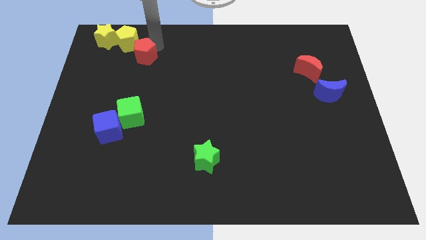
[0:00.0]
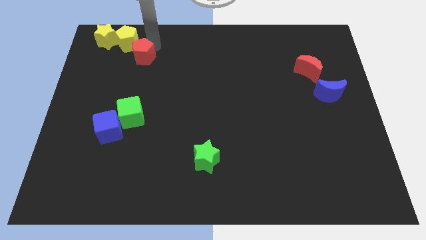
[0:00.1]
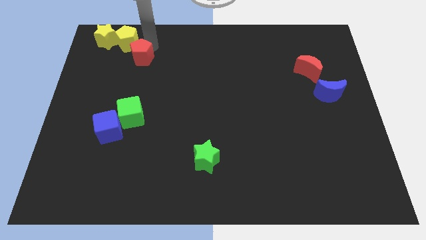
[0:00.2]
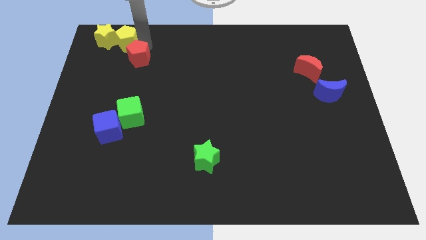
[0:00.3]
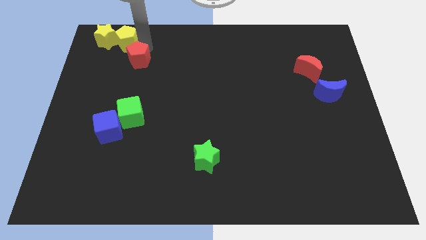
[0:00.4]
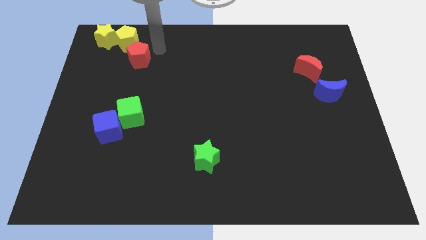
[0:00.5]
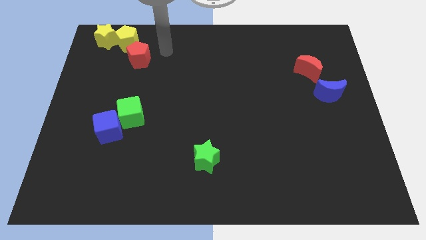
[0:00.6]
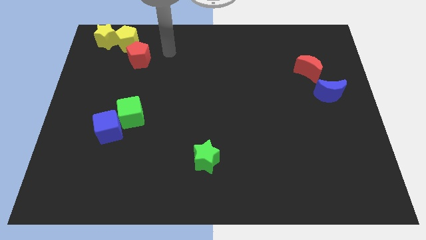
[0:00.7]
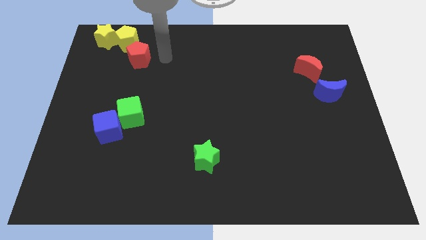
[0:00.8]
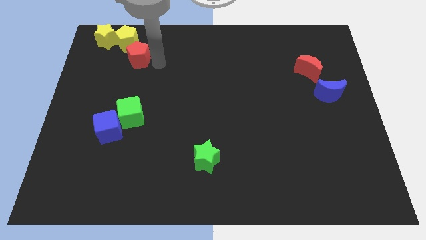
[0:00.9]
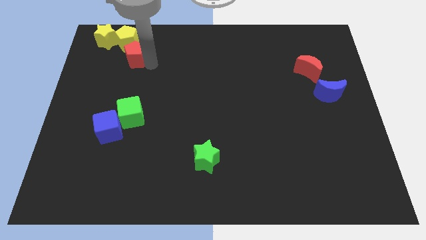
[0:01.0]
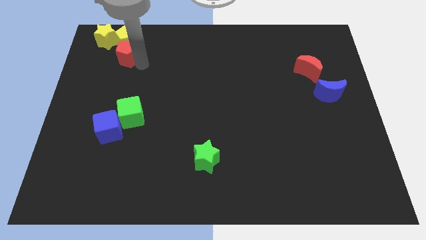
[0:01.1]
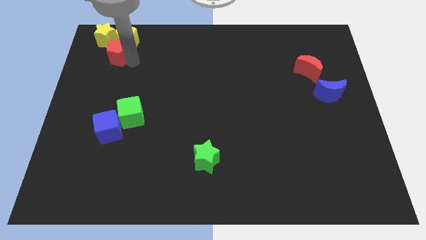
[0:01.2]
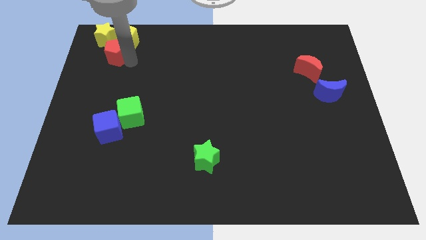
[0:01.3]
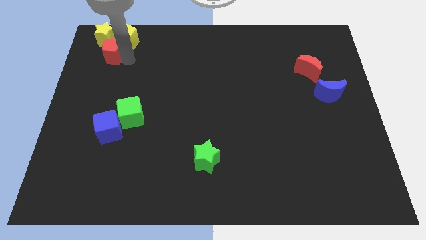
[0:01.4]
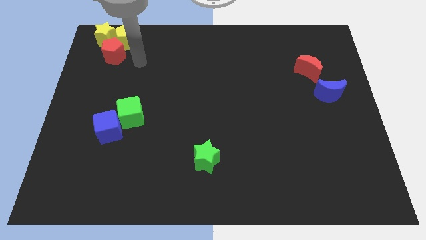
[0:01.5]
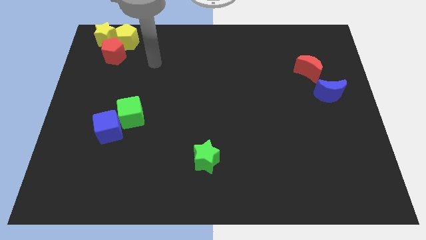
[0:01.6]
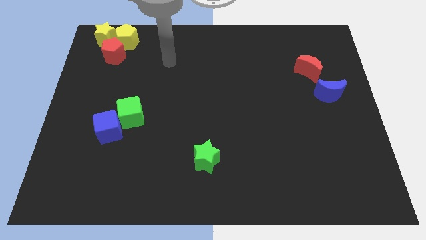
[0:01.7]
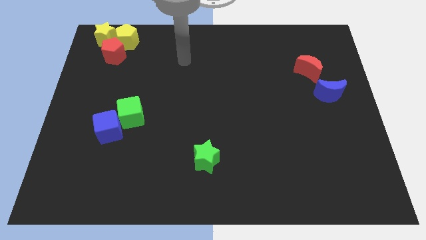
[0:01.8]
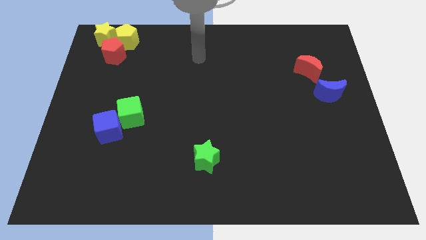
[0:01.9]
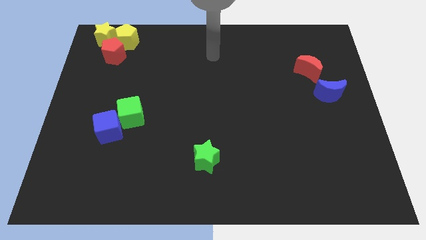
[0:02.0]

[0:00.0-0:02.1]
place the red pentagon to the bottom of the yellow pentagon

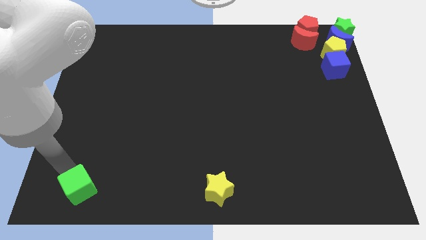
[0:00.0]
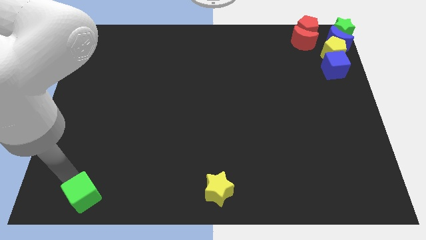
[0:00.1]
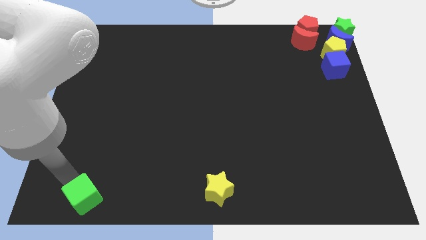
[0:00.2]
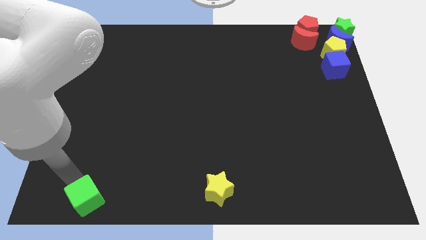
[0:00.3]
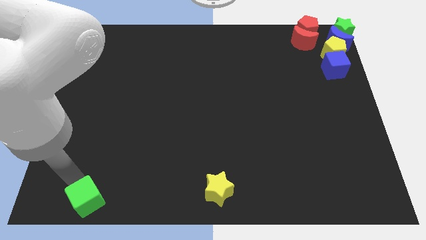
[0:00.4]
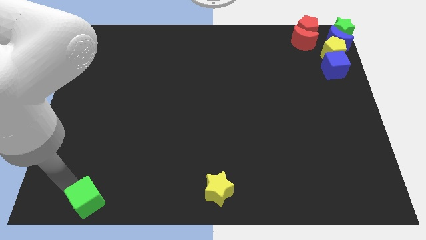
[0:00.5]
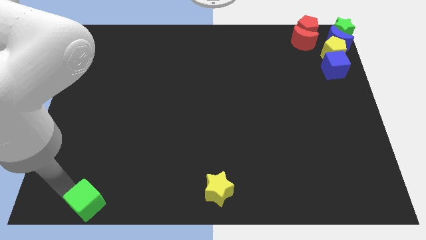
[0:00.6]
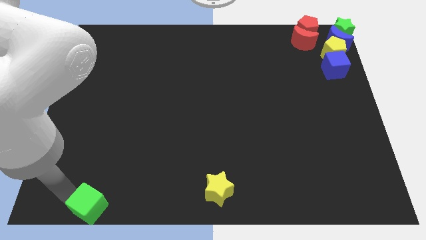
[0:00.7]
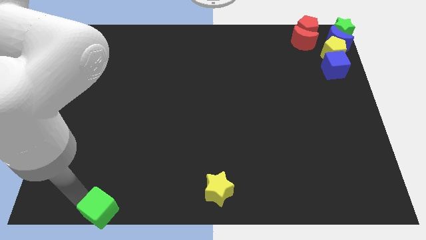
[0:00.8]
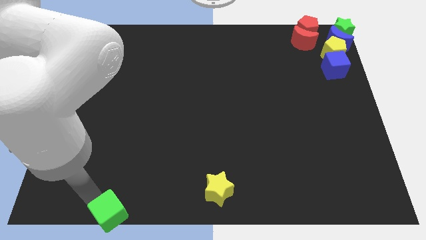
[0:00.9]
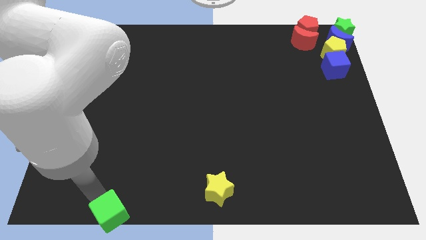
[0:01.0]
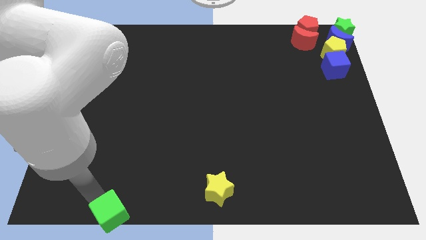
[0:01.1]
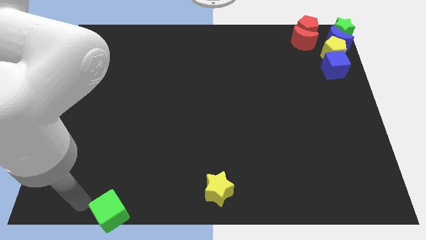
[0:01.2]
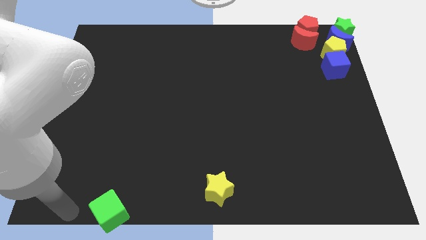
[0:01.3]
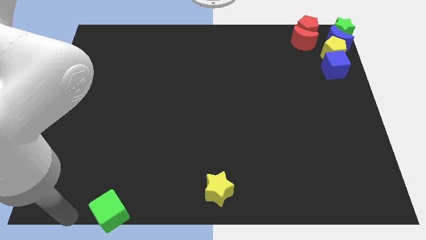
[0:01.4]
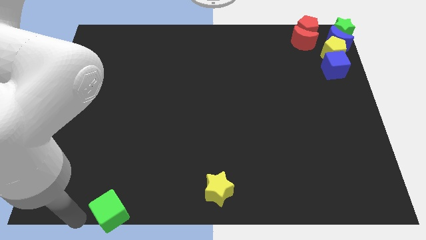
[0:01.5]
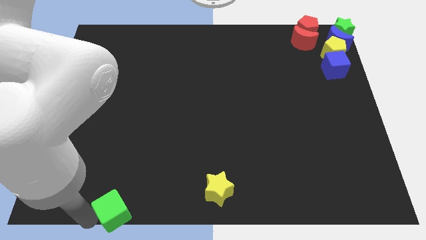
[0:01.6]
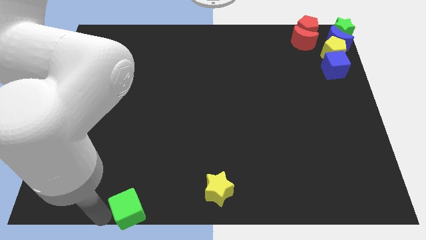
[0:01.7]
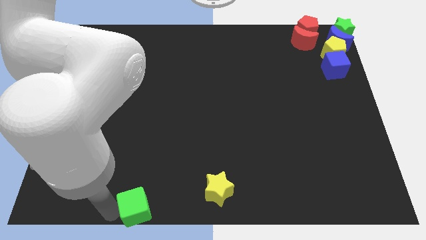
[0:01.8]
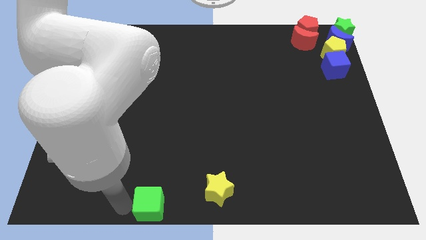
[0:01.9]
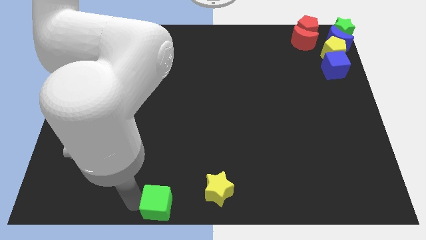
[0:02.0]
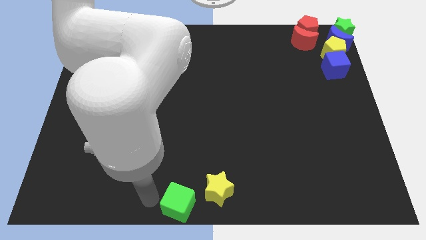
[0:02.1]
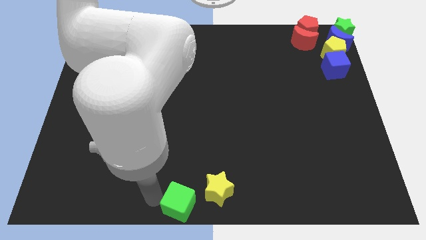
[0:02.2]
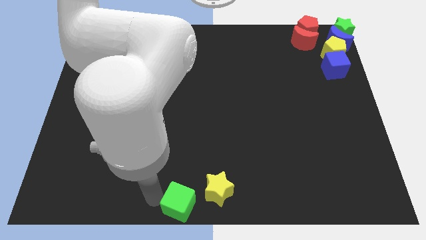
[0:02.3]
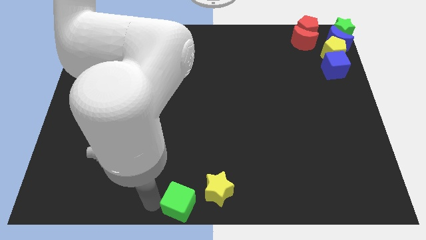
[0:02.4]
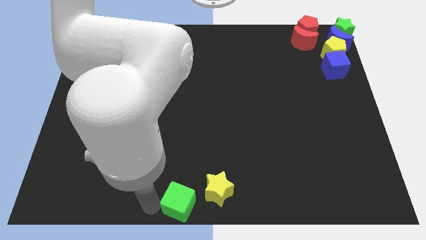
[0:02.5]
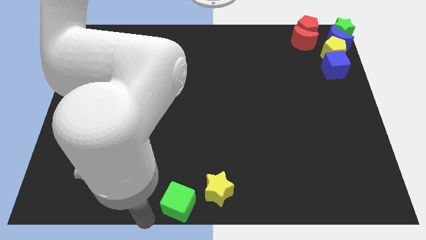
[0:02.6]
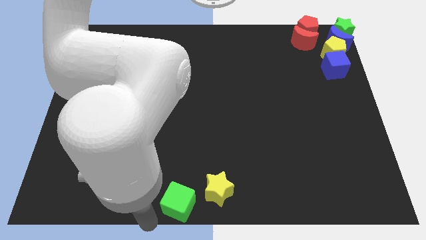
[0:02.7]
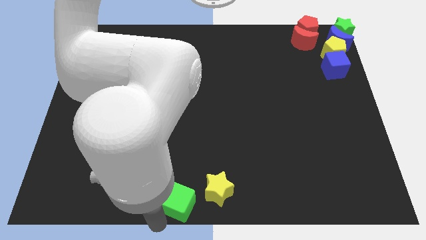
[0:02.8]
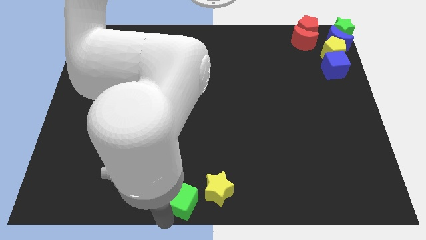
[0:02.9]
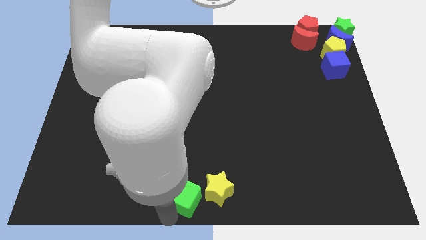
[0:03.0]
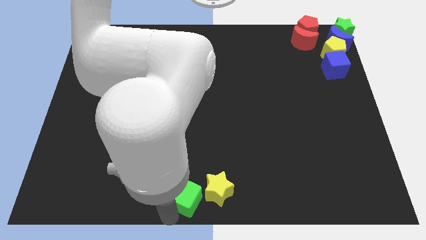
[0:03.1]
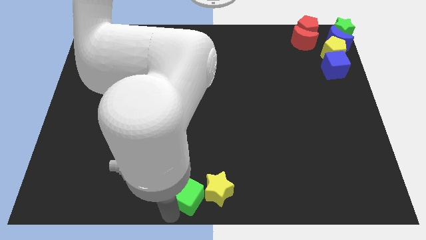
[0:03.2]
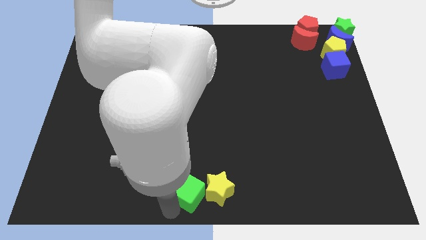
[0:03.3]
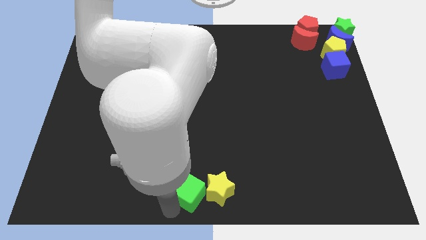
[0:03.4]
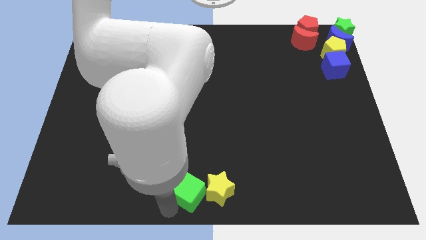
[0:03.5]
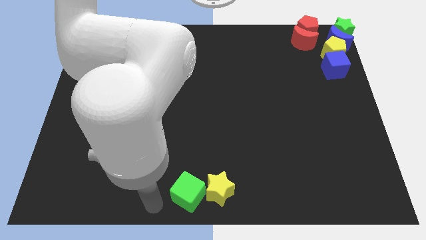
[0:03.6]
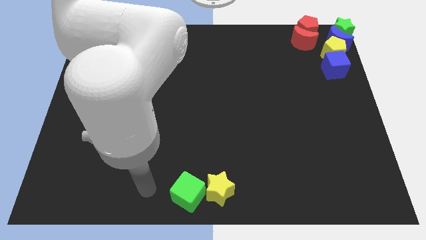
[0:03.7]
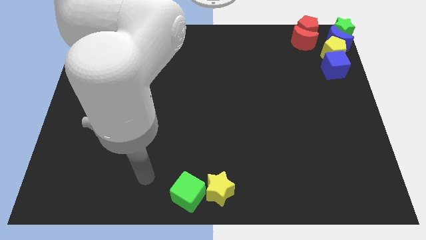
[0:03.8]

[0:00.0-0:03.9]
move green cube close to the yellow star

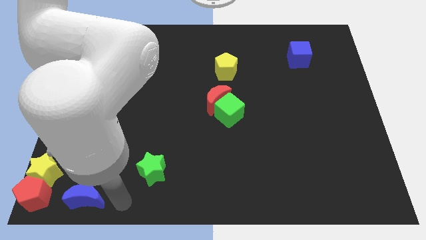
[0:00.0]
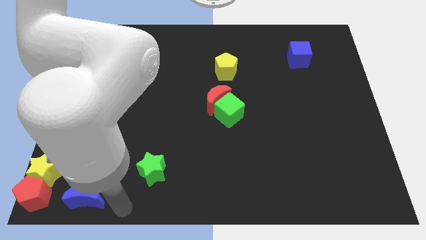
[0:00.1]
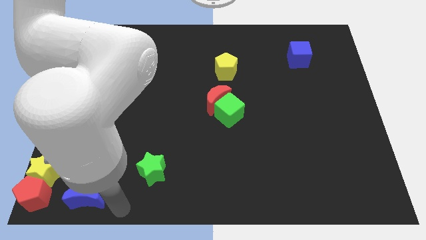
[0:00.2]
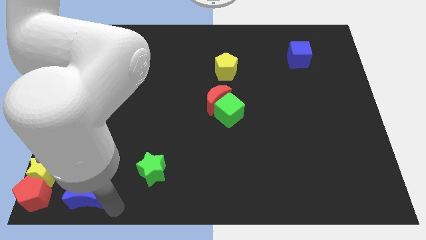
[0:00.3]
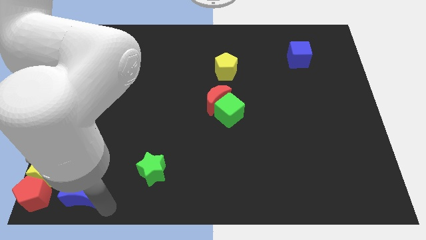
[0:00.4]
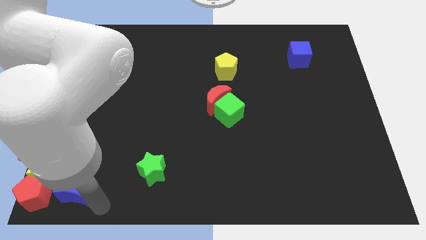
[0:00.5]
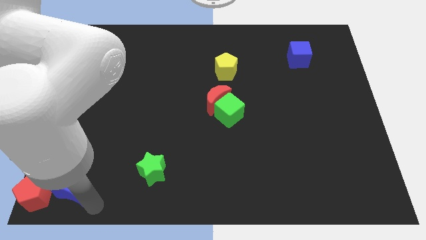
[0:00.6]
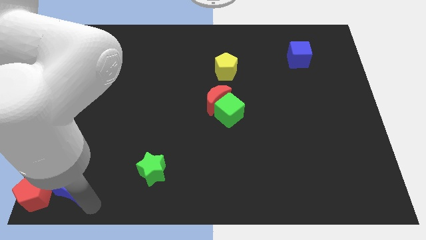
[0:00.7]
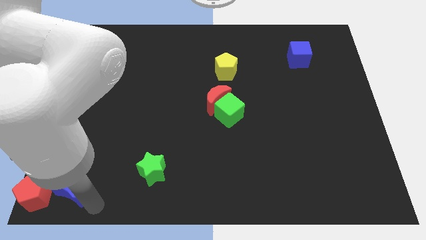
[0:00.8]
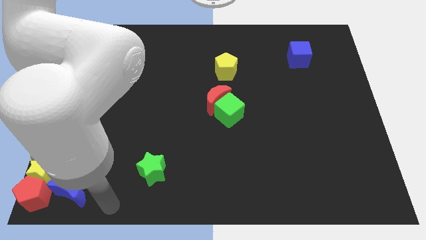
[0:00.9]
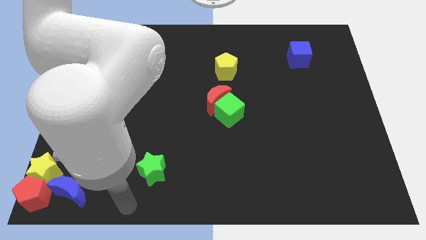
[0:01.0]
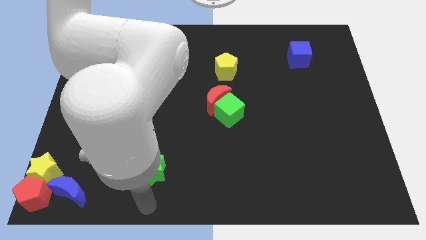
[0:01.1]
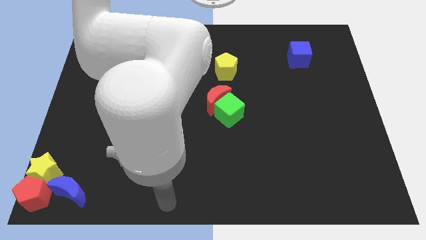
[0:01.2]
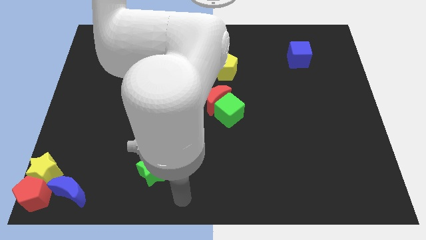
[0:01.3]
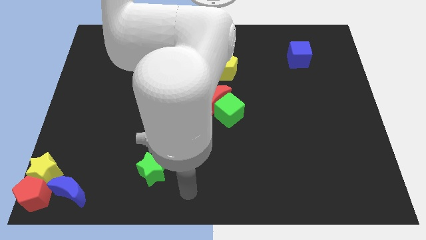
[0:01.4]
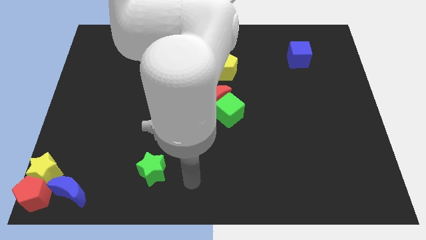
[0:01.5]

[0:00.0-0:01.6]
push blue crescent into red pentagon

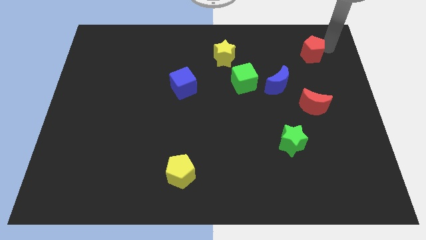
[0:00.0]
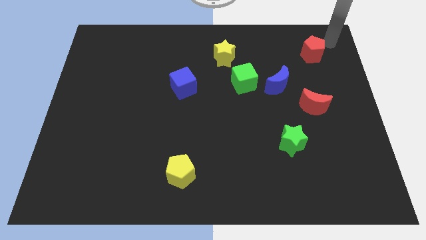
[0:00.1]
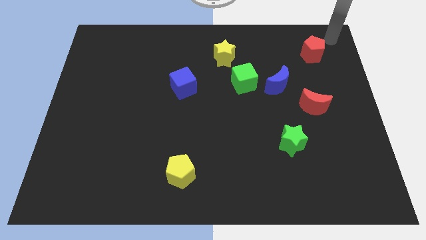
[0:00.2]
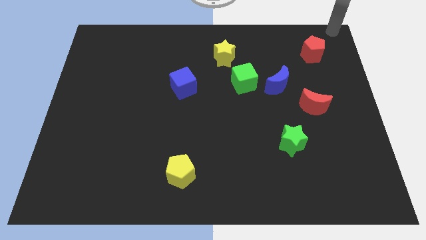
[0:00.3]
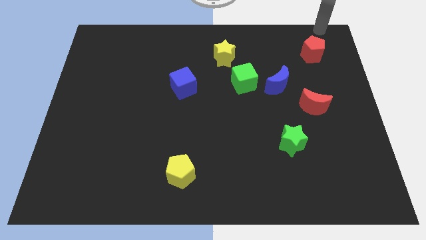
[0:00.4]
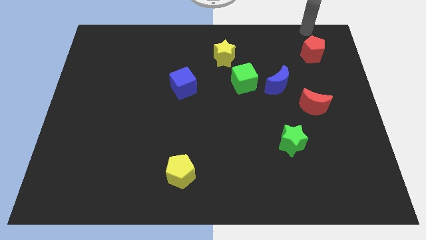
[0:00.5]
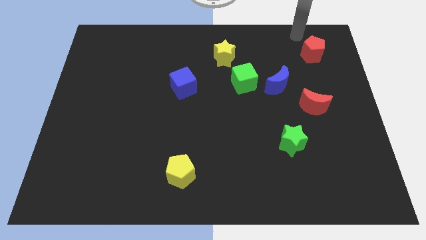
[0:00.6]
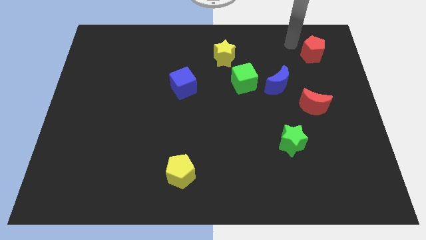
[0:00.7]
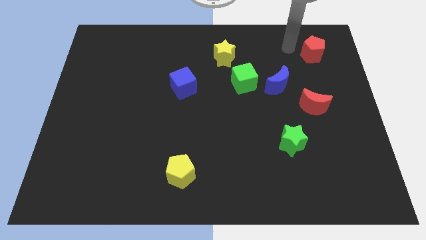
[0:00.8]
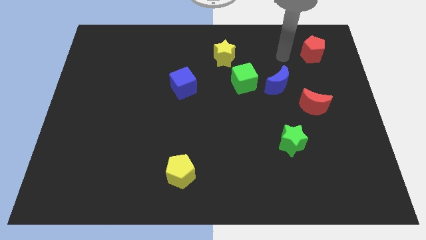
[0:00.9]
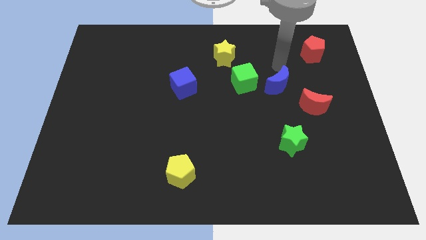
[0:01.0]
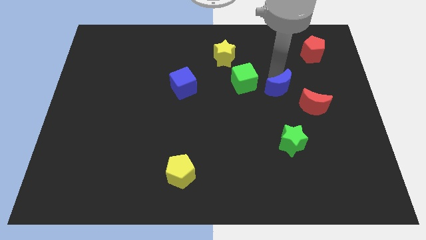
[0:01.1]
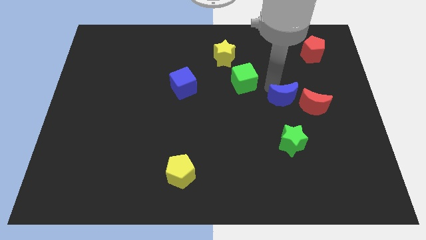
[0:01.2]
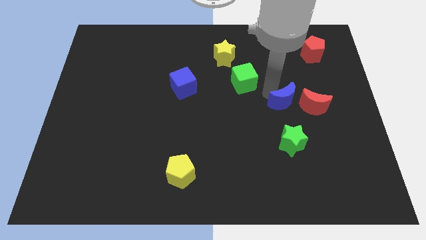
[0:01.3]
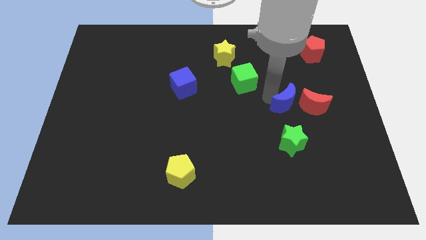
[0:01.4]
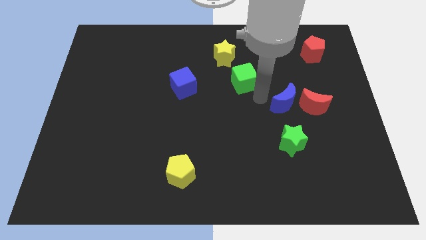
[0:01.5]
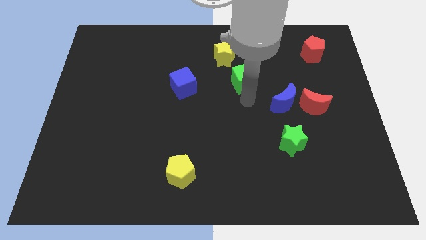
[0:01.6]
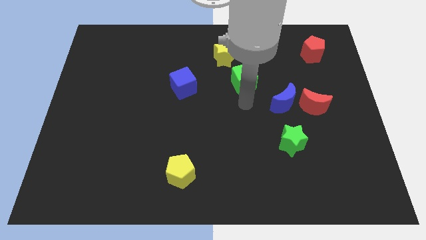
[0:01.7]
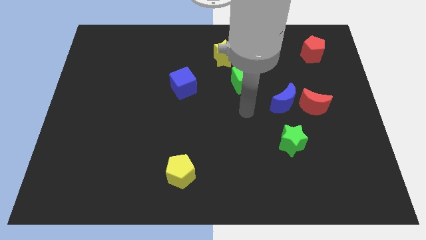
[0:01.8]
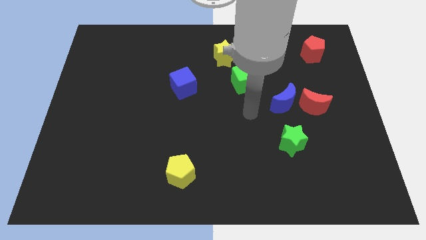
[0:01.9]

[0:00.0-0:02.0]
push the blue moon close to the red moon
